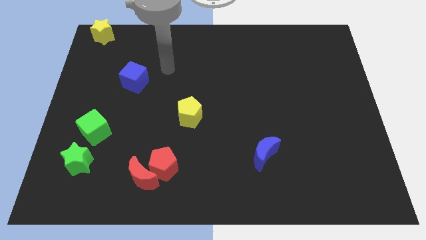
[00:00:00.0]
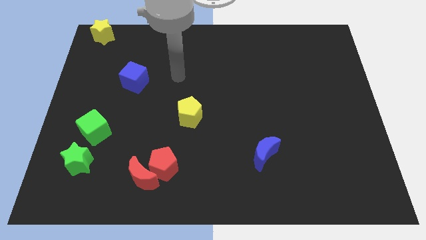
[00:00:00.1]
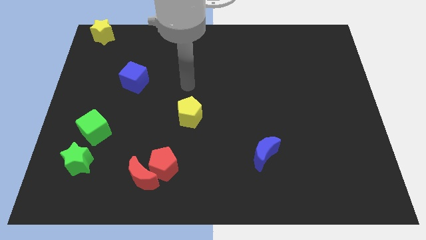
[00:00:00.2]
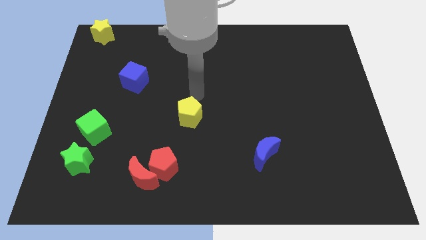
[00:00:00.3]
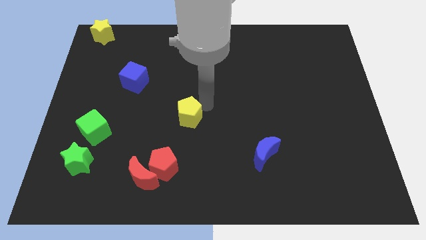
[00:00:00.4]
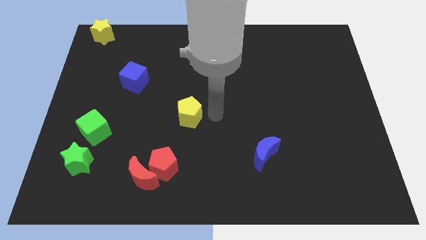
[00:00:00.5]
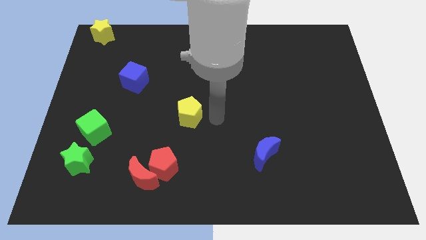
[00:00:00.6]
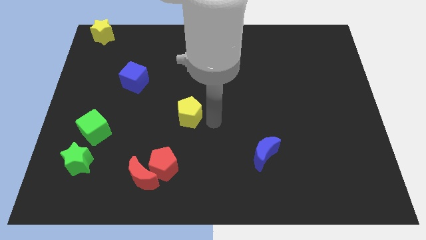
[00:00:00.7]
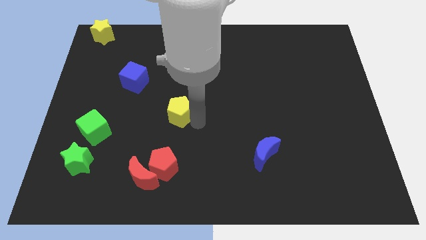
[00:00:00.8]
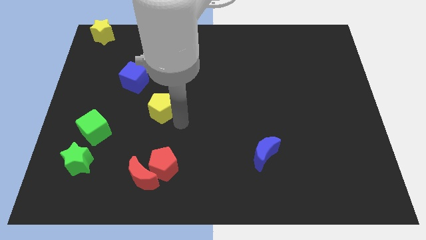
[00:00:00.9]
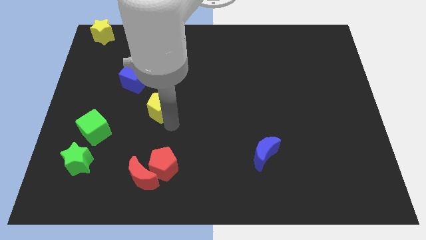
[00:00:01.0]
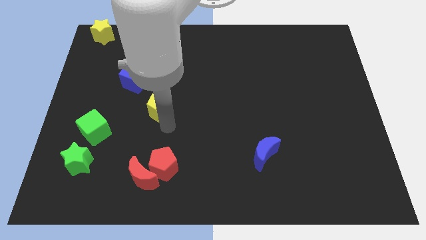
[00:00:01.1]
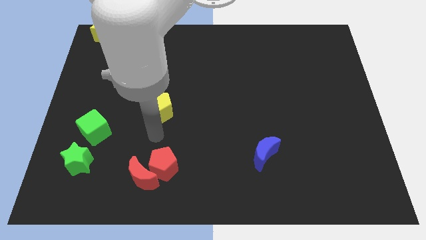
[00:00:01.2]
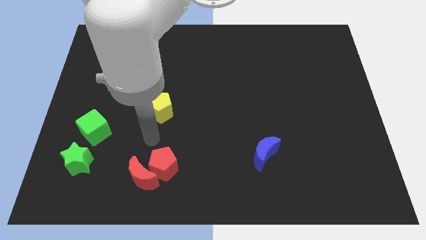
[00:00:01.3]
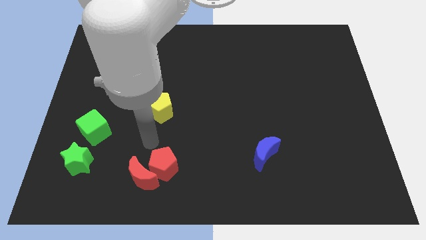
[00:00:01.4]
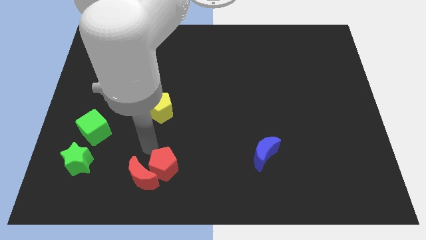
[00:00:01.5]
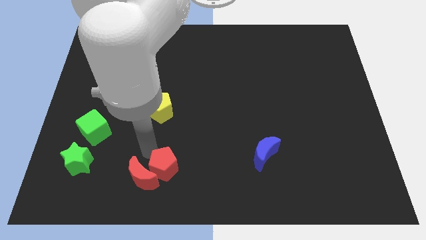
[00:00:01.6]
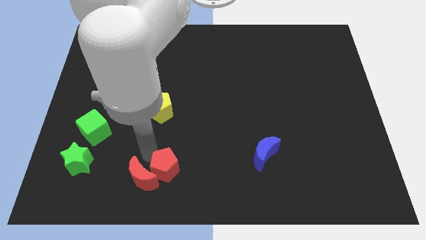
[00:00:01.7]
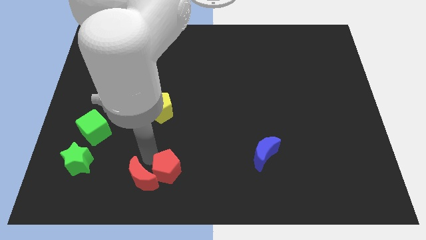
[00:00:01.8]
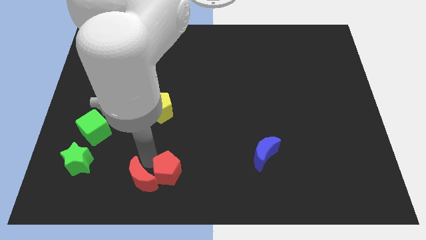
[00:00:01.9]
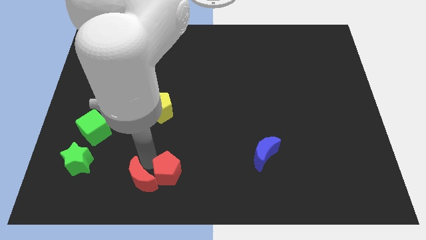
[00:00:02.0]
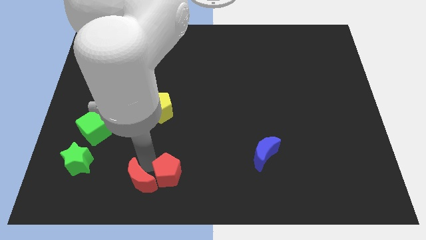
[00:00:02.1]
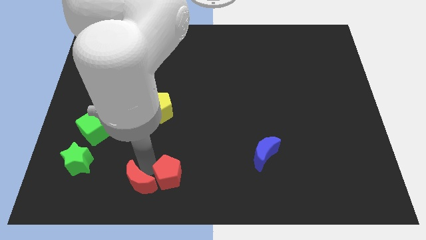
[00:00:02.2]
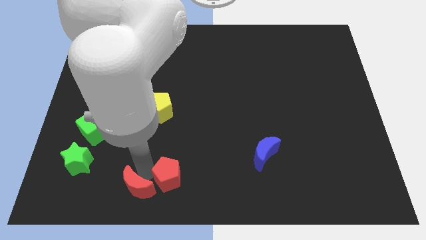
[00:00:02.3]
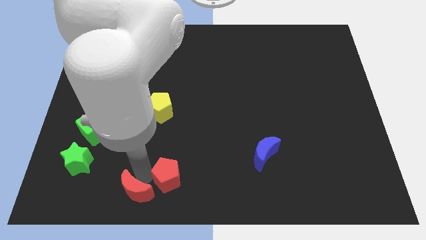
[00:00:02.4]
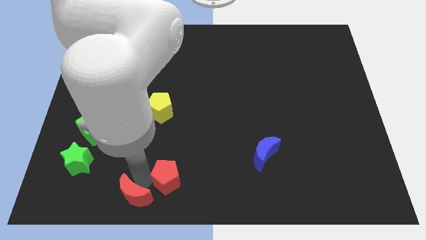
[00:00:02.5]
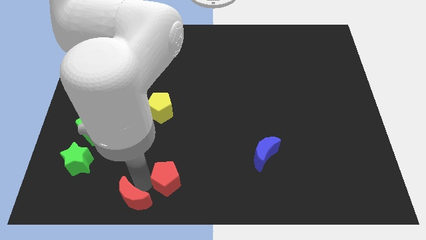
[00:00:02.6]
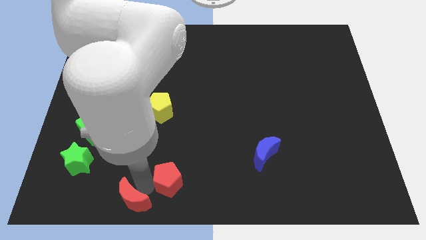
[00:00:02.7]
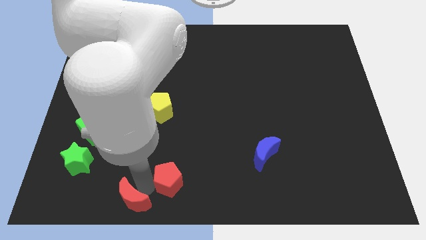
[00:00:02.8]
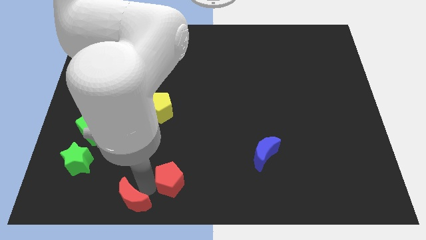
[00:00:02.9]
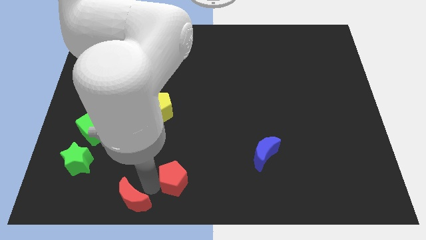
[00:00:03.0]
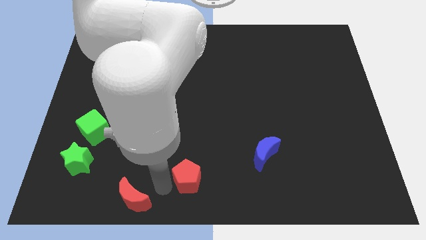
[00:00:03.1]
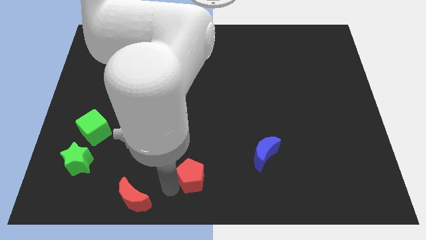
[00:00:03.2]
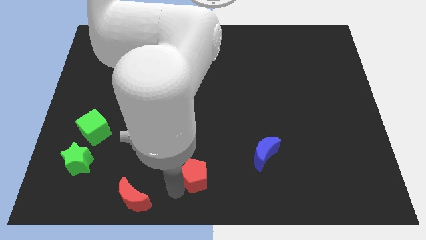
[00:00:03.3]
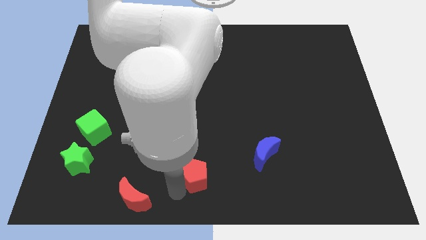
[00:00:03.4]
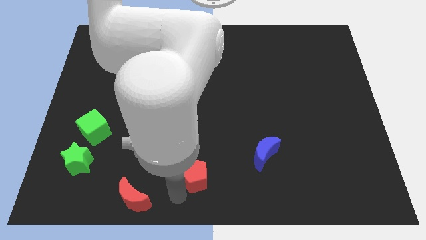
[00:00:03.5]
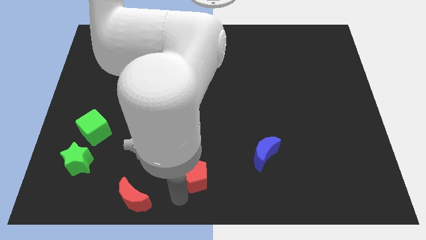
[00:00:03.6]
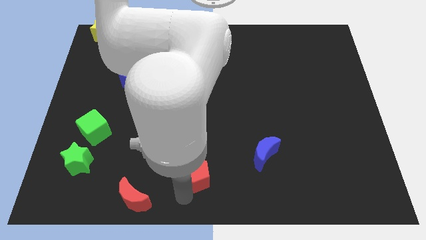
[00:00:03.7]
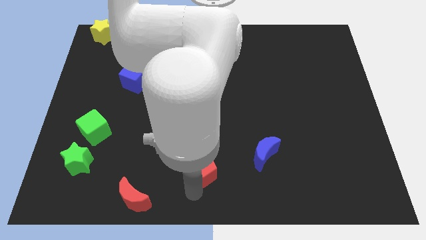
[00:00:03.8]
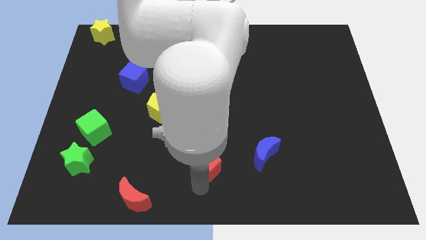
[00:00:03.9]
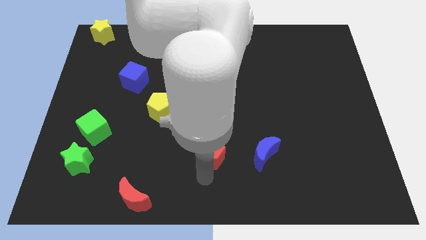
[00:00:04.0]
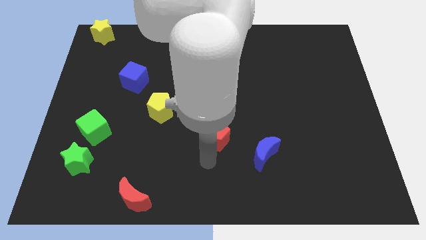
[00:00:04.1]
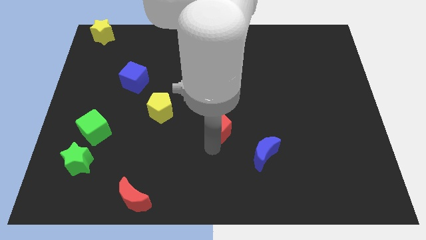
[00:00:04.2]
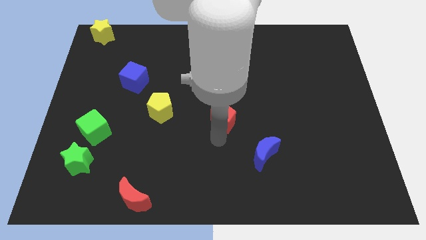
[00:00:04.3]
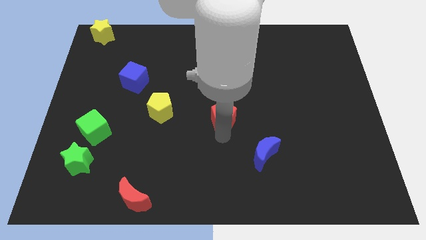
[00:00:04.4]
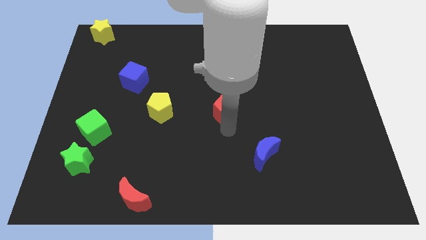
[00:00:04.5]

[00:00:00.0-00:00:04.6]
move red pentagon towards the center

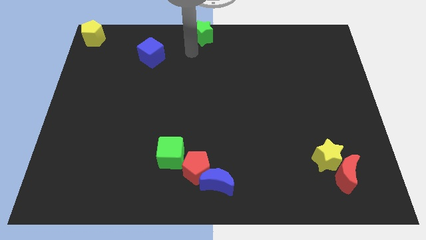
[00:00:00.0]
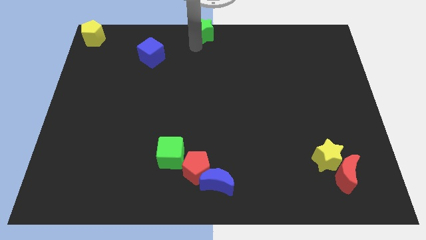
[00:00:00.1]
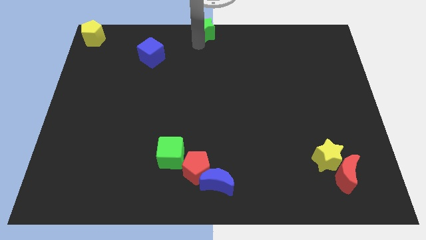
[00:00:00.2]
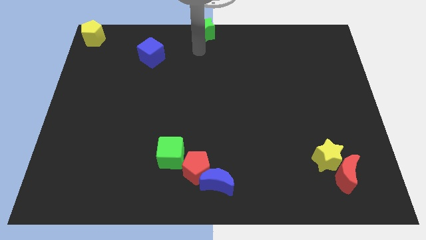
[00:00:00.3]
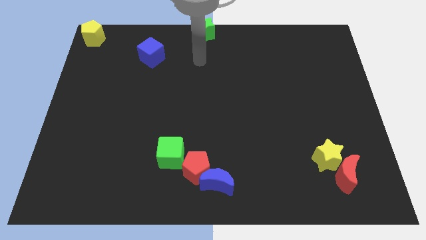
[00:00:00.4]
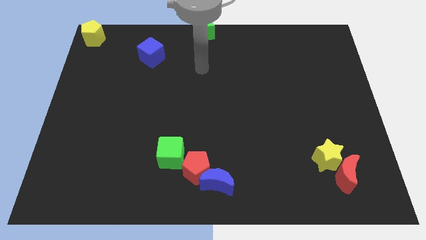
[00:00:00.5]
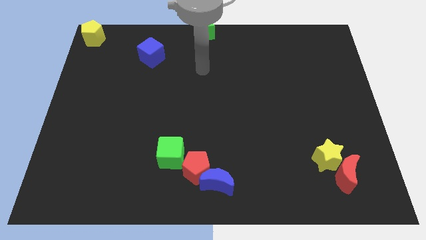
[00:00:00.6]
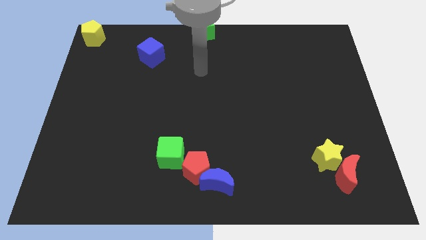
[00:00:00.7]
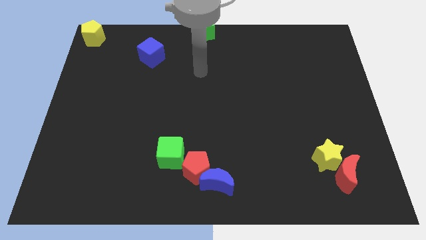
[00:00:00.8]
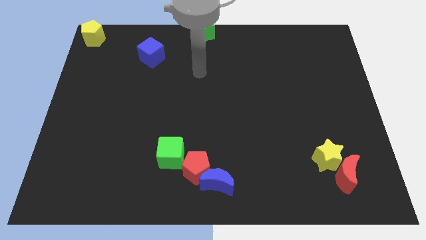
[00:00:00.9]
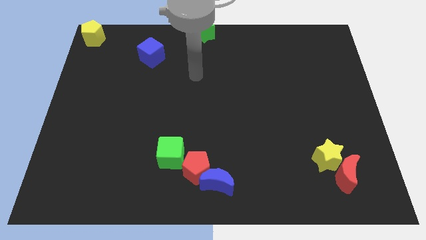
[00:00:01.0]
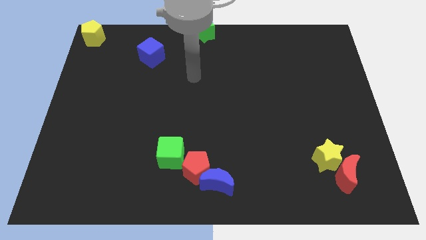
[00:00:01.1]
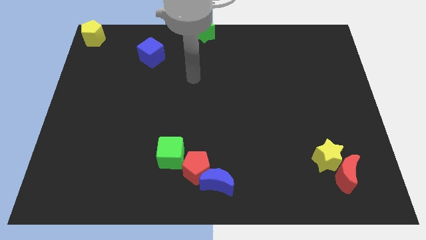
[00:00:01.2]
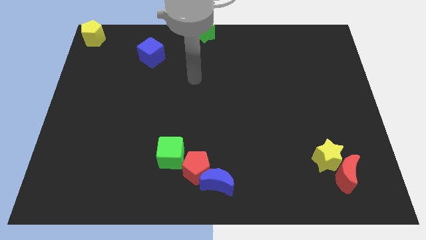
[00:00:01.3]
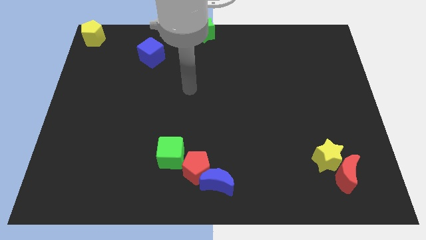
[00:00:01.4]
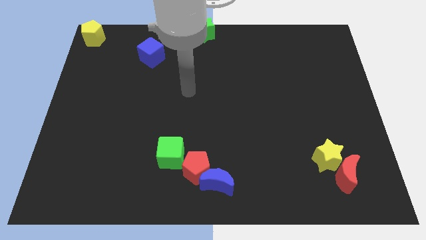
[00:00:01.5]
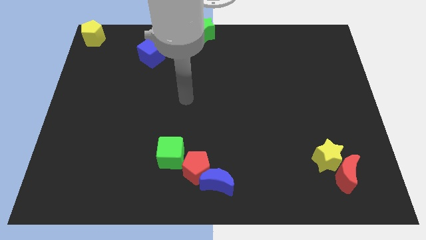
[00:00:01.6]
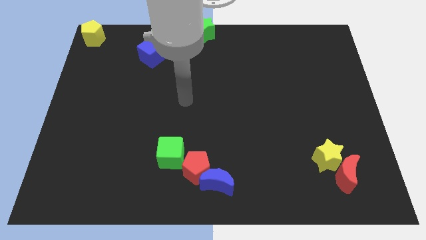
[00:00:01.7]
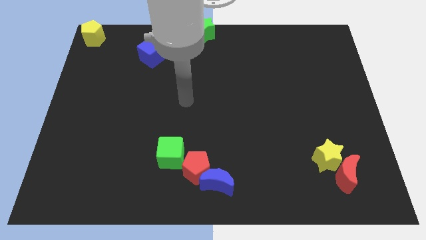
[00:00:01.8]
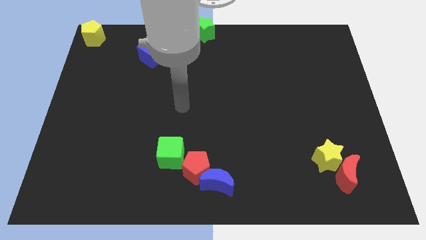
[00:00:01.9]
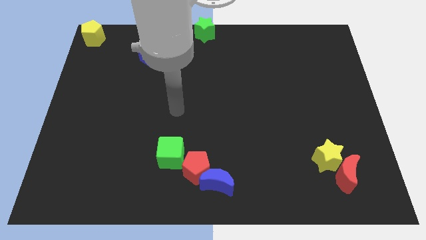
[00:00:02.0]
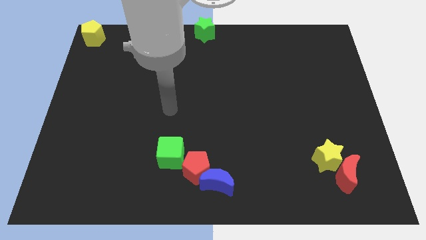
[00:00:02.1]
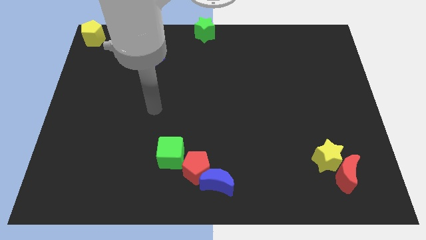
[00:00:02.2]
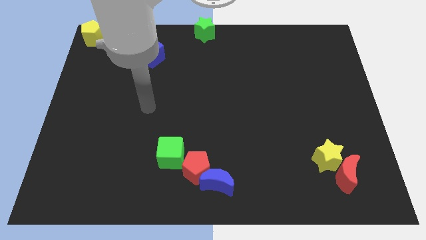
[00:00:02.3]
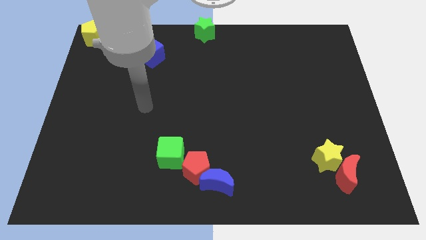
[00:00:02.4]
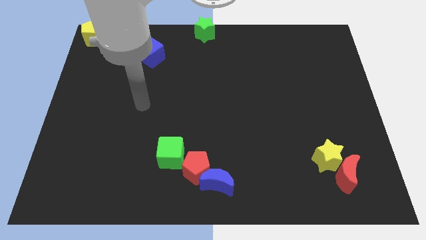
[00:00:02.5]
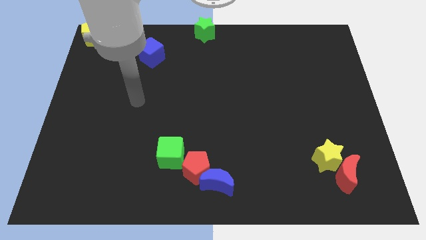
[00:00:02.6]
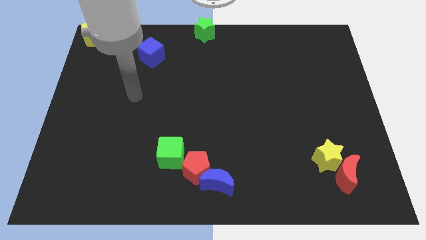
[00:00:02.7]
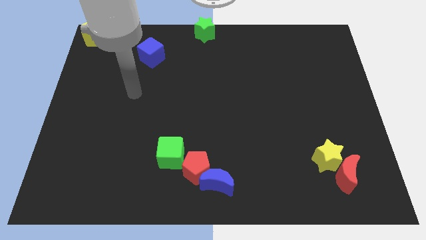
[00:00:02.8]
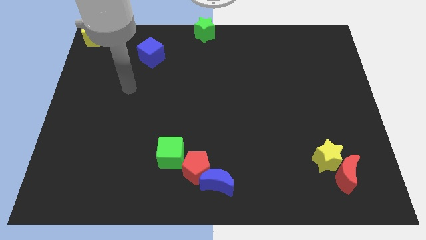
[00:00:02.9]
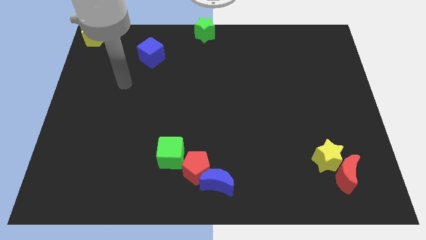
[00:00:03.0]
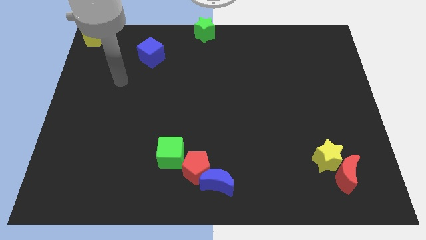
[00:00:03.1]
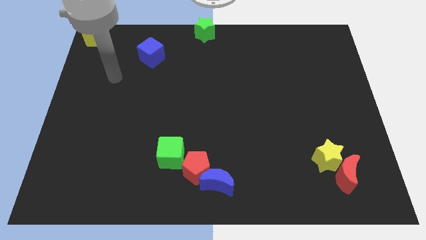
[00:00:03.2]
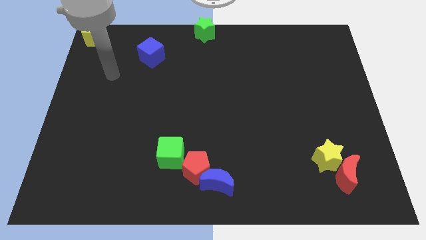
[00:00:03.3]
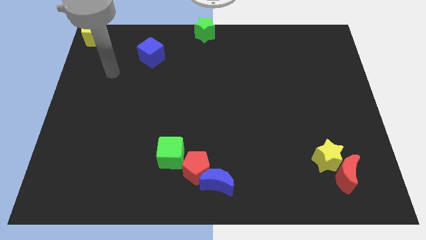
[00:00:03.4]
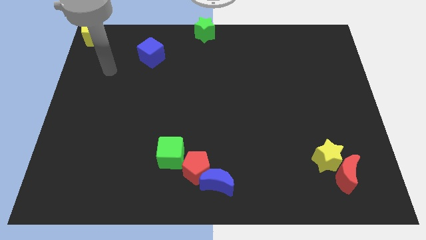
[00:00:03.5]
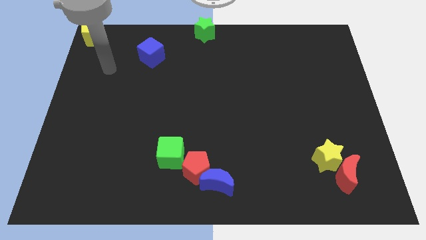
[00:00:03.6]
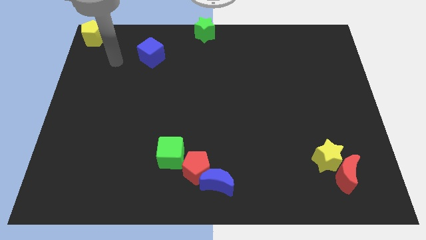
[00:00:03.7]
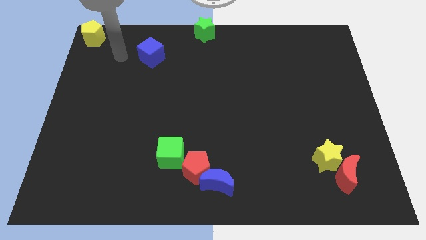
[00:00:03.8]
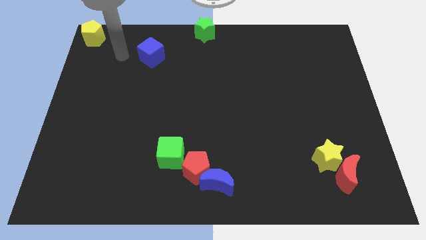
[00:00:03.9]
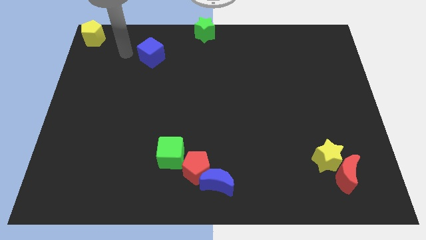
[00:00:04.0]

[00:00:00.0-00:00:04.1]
move your arm away from green star

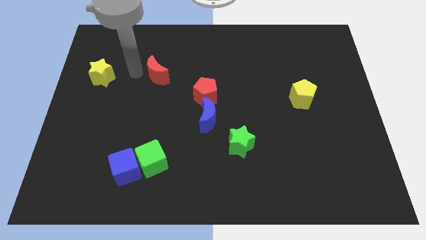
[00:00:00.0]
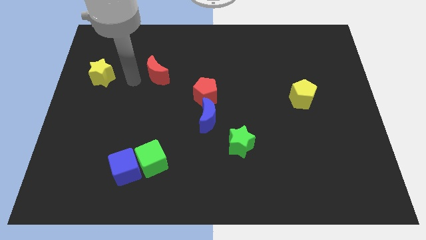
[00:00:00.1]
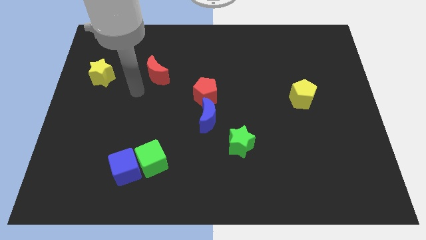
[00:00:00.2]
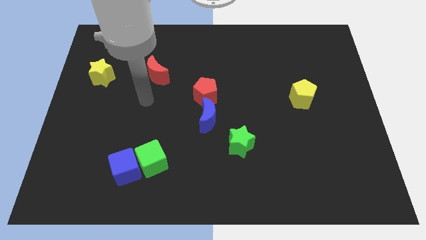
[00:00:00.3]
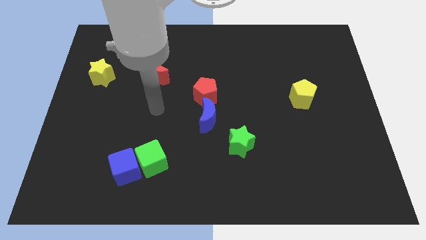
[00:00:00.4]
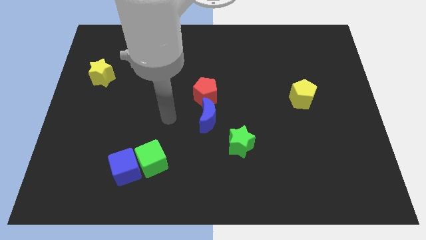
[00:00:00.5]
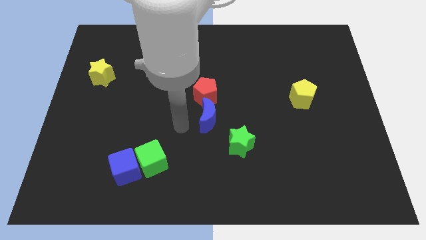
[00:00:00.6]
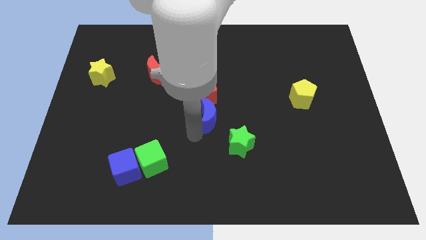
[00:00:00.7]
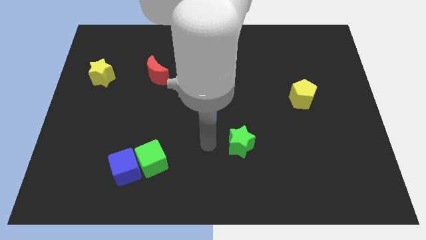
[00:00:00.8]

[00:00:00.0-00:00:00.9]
place your arm at the bottom of the blue crescent
